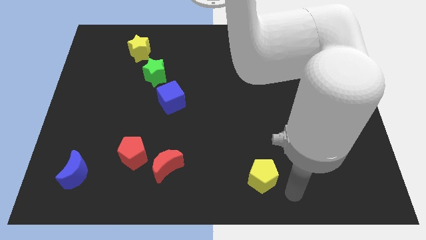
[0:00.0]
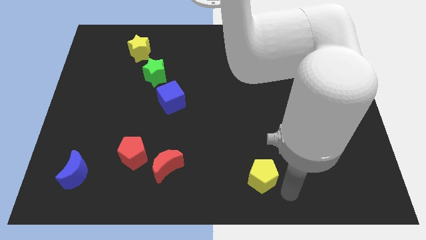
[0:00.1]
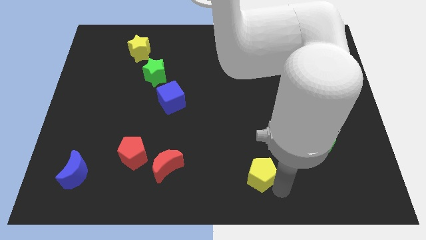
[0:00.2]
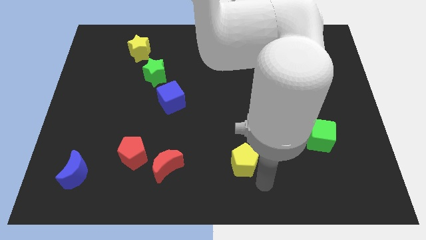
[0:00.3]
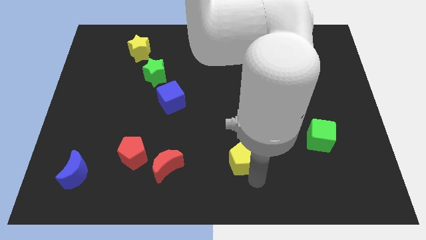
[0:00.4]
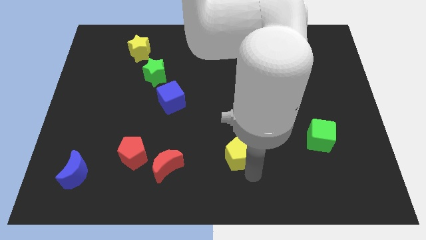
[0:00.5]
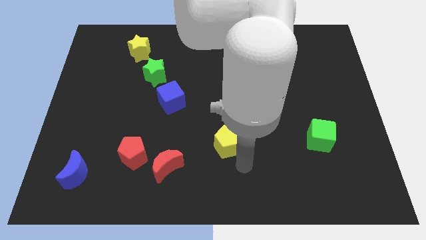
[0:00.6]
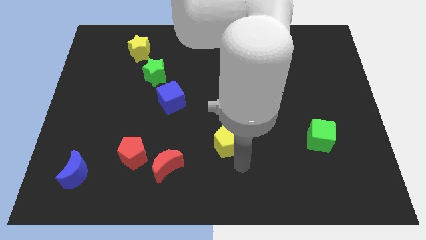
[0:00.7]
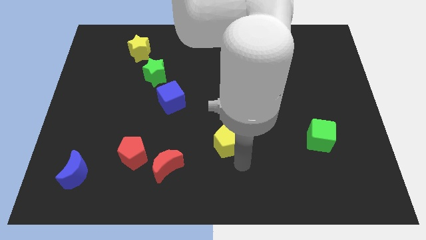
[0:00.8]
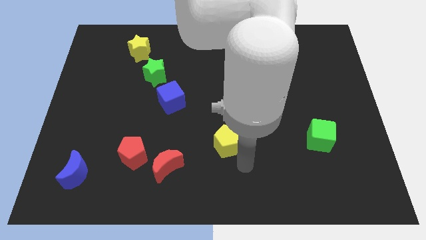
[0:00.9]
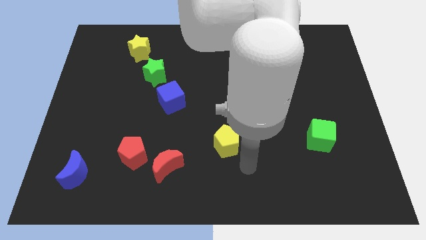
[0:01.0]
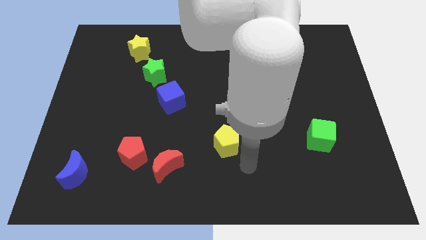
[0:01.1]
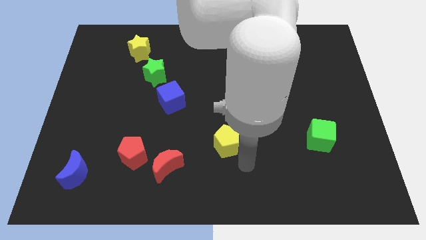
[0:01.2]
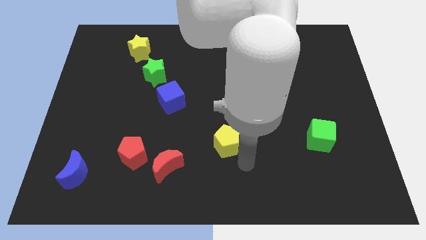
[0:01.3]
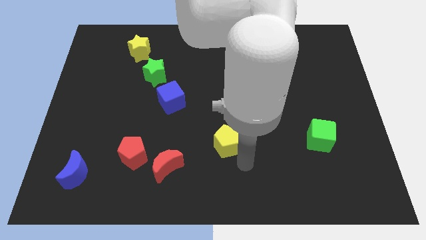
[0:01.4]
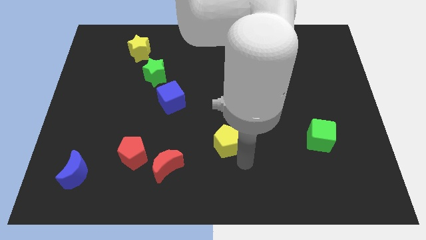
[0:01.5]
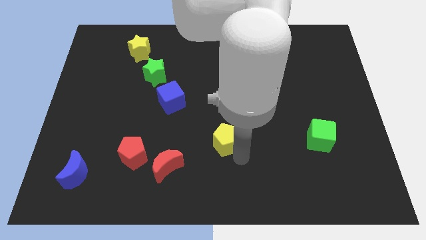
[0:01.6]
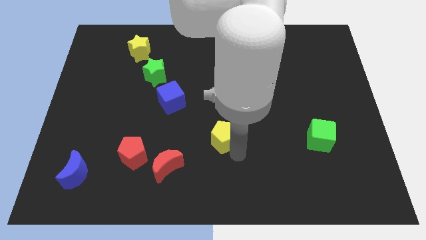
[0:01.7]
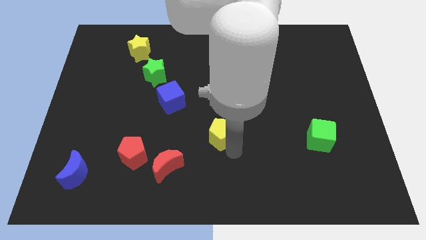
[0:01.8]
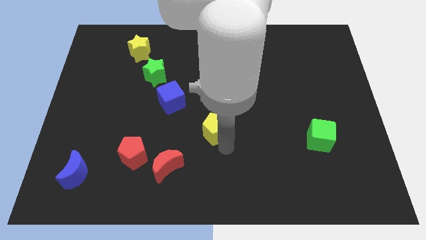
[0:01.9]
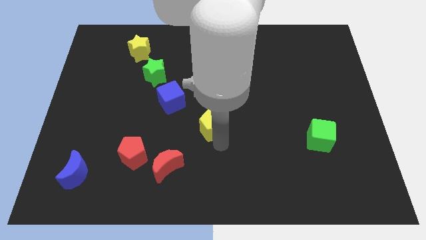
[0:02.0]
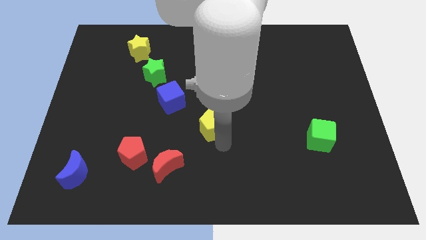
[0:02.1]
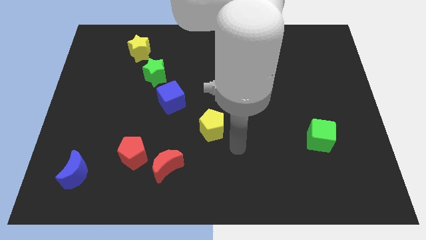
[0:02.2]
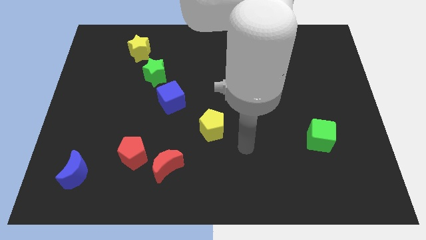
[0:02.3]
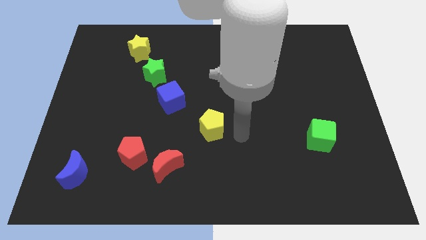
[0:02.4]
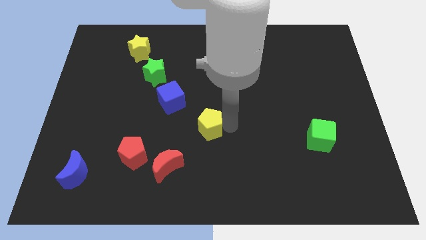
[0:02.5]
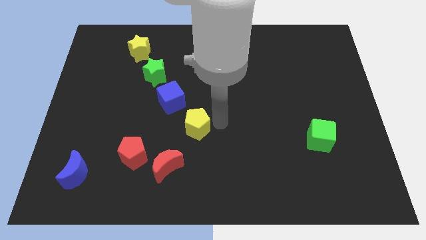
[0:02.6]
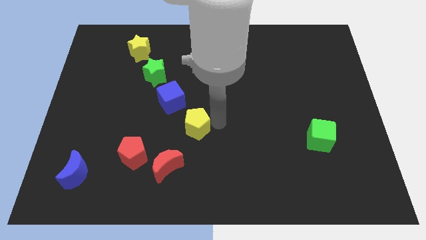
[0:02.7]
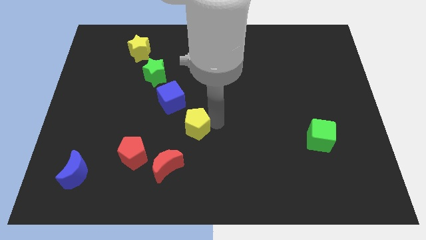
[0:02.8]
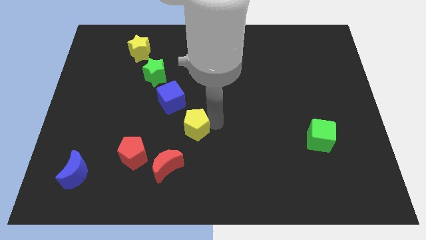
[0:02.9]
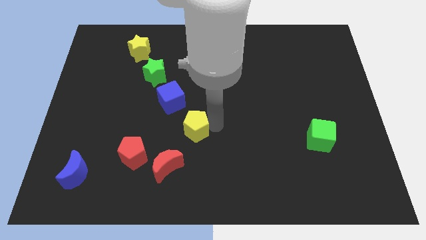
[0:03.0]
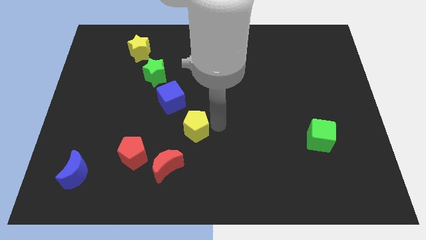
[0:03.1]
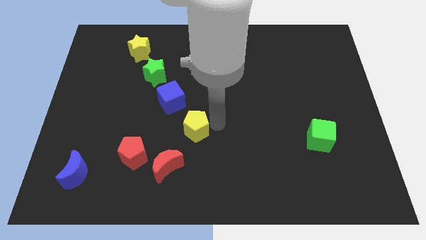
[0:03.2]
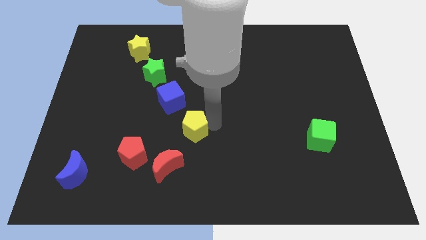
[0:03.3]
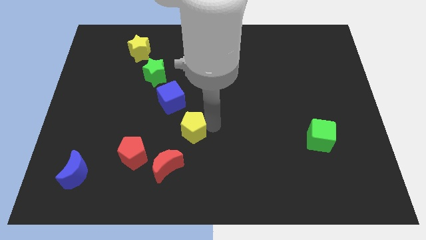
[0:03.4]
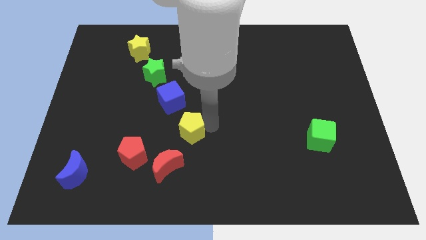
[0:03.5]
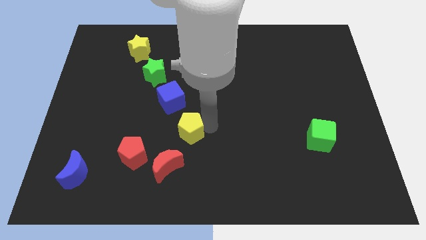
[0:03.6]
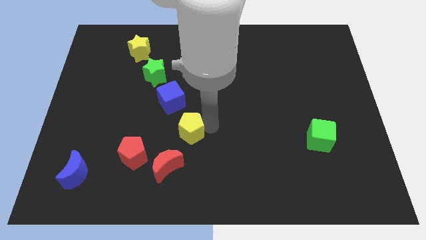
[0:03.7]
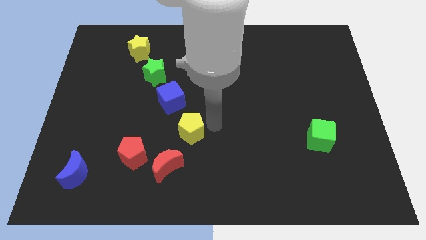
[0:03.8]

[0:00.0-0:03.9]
place the yellow pentagon at the bottom right of the blue cube

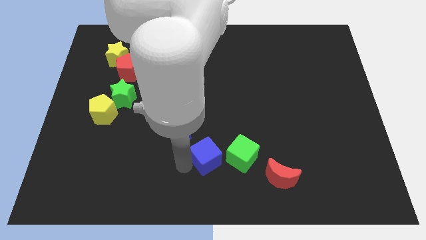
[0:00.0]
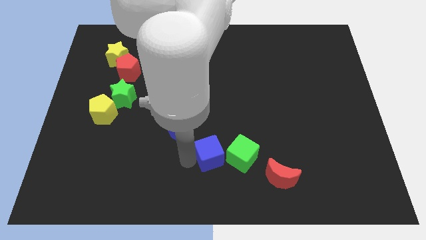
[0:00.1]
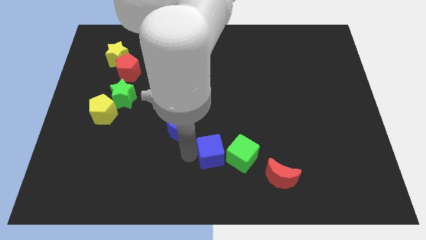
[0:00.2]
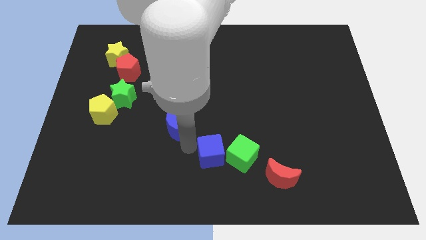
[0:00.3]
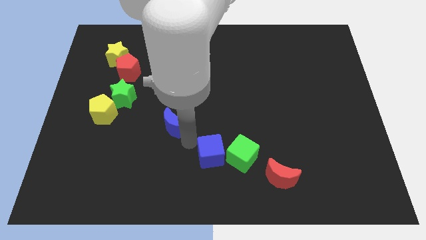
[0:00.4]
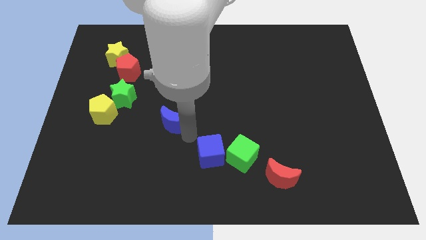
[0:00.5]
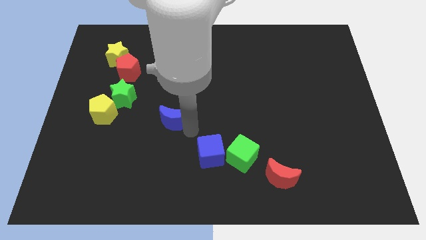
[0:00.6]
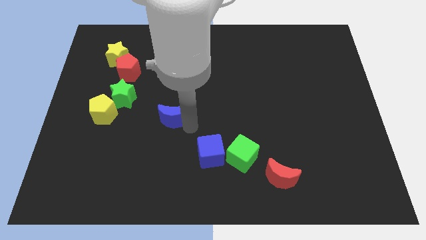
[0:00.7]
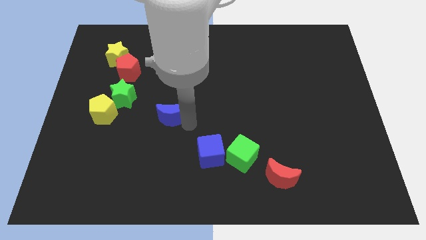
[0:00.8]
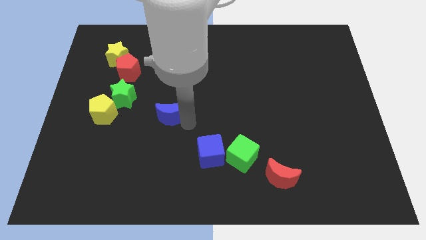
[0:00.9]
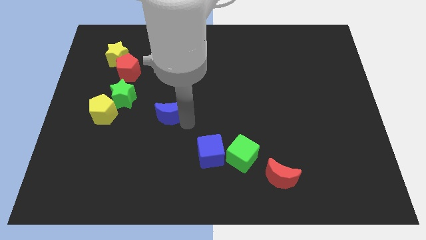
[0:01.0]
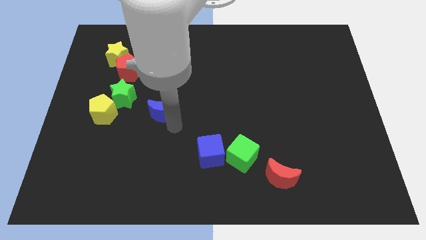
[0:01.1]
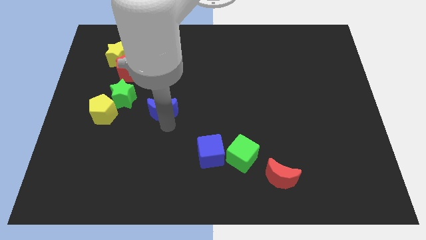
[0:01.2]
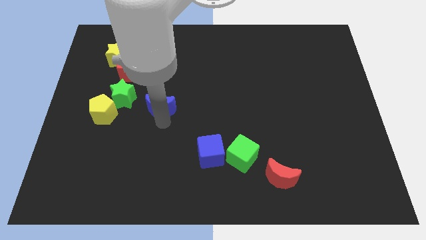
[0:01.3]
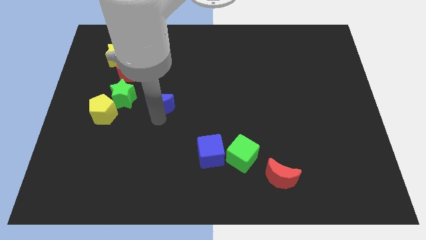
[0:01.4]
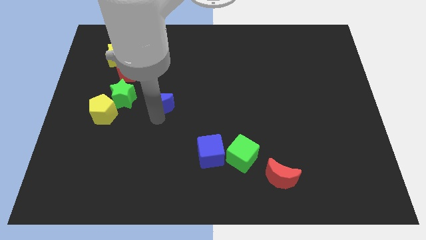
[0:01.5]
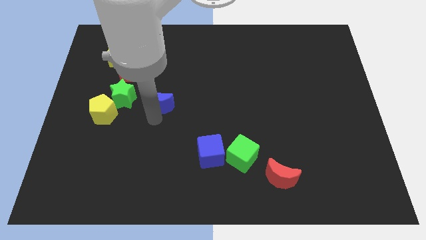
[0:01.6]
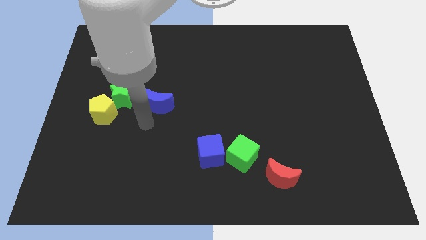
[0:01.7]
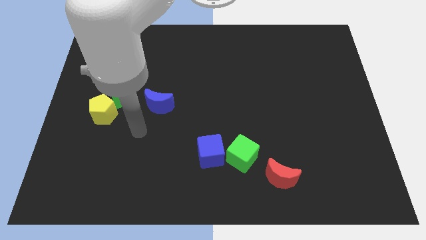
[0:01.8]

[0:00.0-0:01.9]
move the blue crescent to the right of the green star

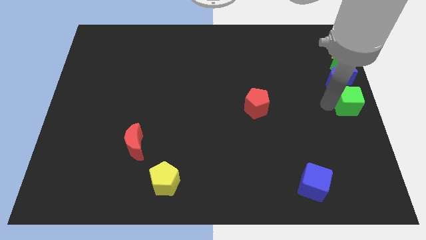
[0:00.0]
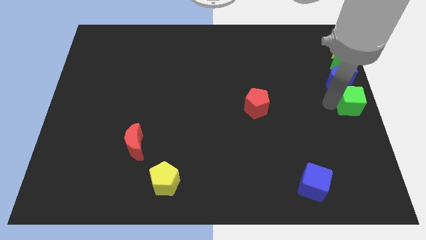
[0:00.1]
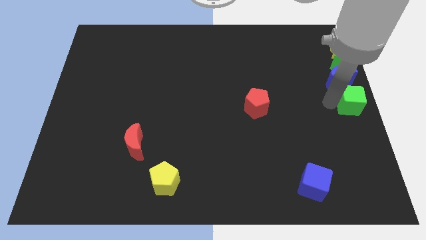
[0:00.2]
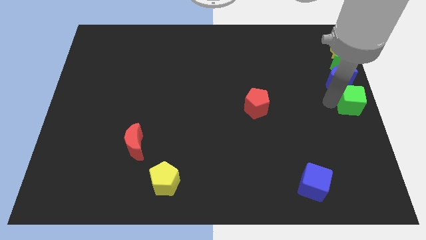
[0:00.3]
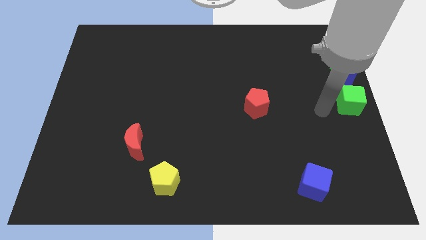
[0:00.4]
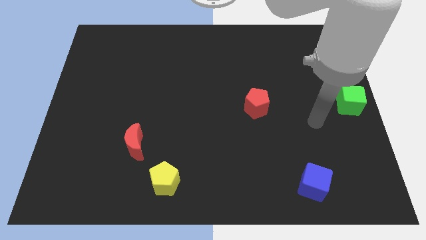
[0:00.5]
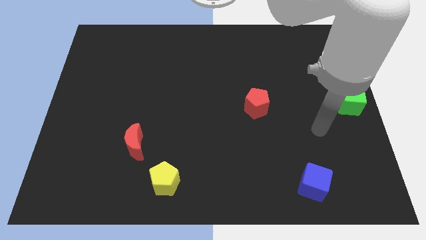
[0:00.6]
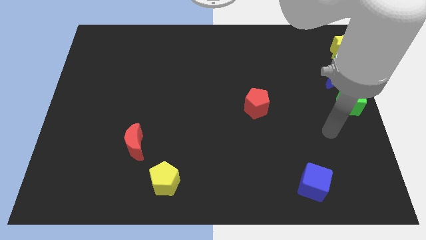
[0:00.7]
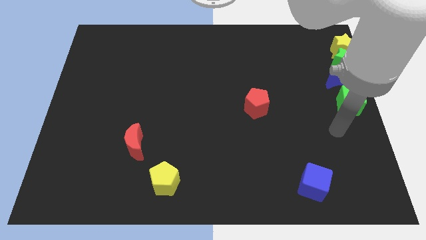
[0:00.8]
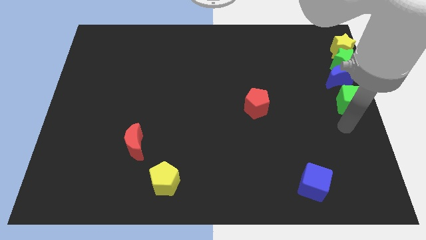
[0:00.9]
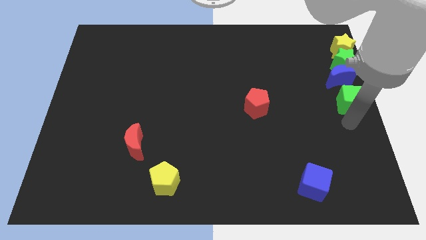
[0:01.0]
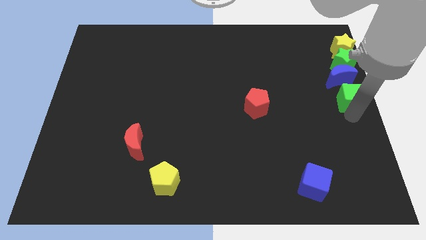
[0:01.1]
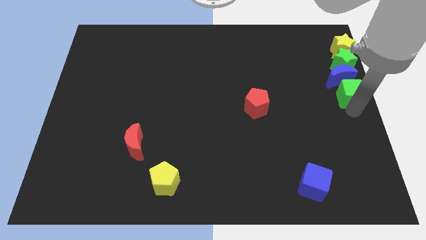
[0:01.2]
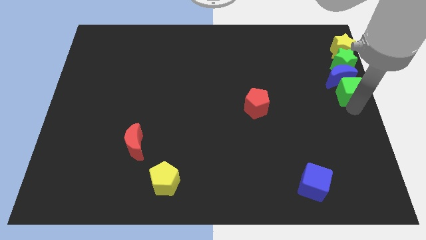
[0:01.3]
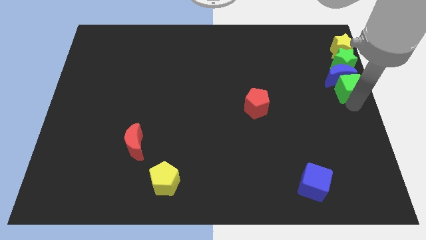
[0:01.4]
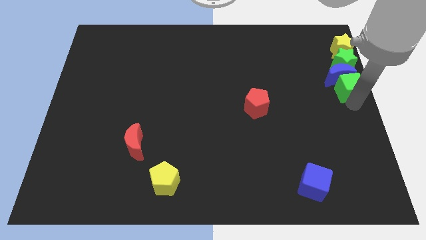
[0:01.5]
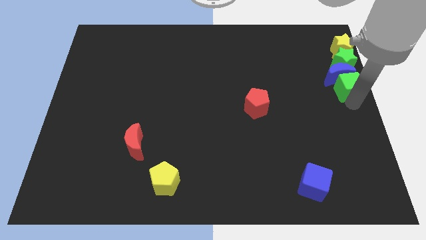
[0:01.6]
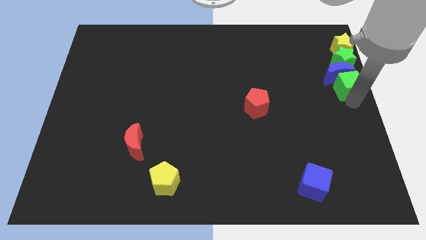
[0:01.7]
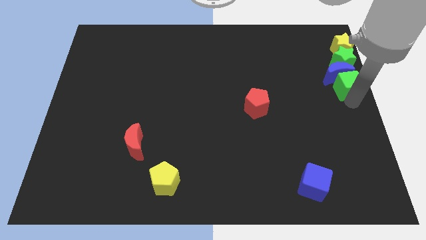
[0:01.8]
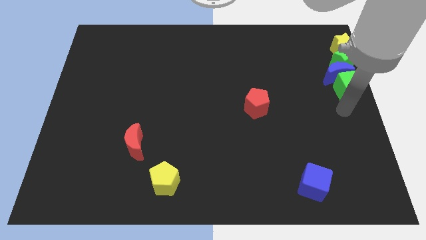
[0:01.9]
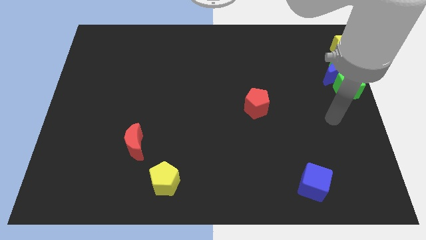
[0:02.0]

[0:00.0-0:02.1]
push the green cube below to the blue crescent

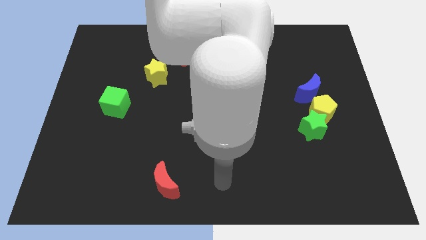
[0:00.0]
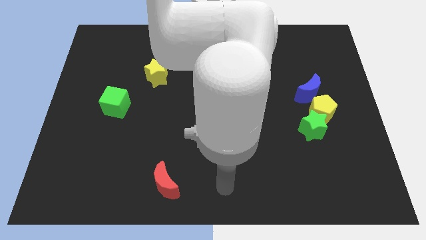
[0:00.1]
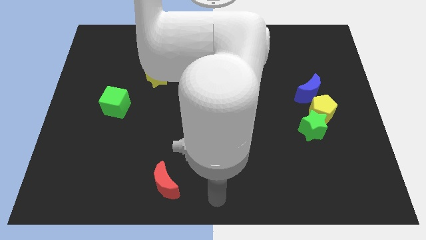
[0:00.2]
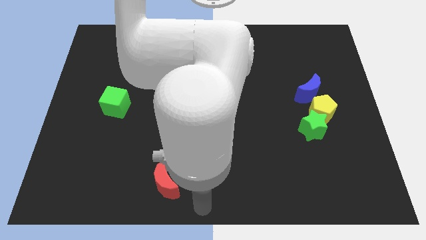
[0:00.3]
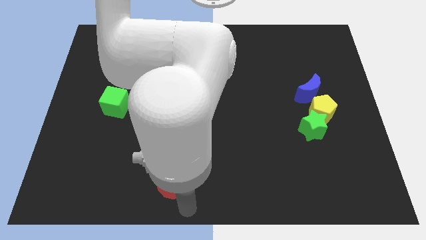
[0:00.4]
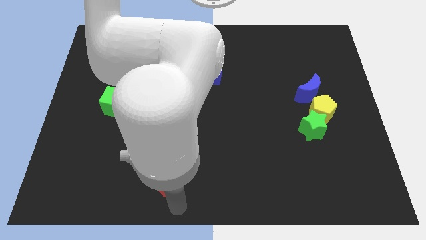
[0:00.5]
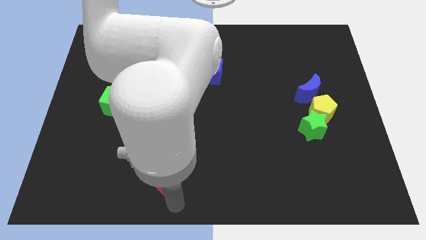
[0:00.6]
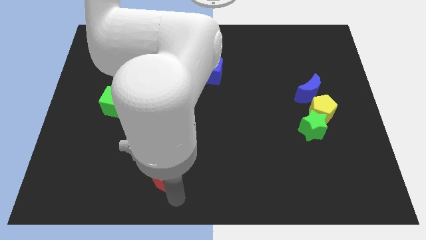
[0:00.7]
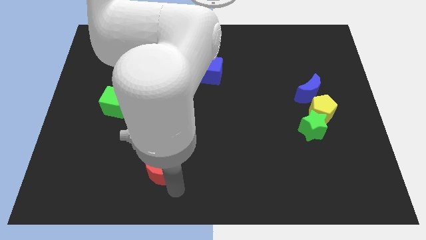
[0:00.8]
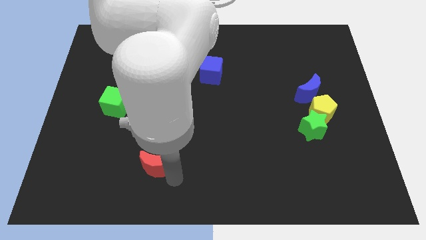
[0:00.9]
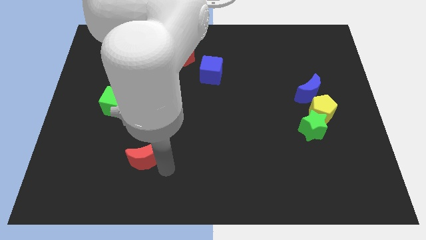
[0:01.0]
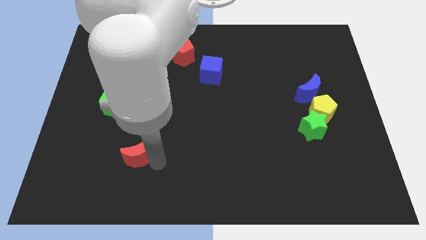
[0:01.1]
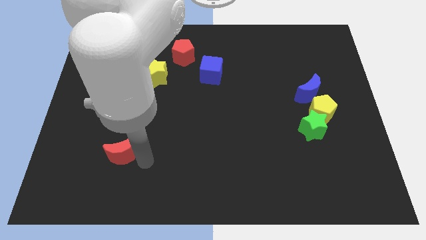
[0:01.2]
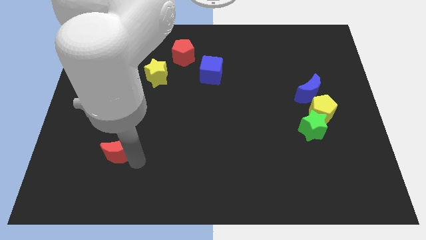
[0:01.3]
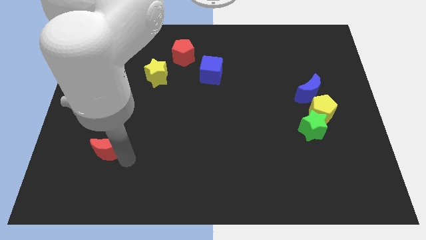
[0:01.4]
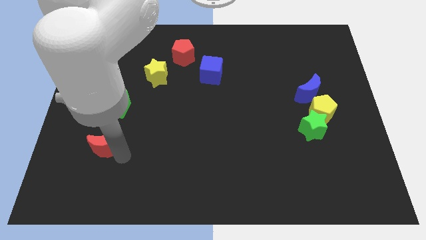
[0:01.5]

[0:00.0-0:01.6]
put the red crescent vertically below the green cube
